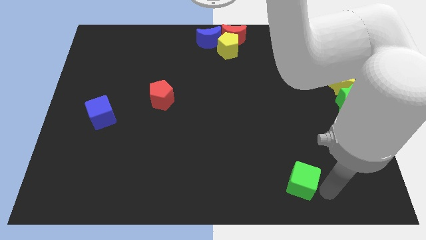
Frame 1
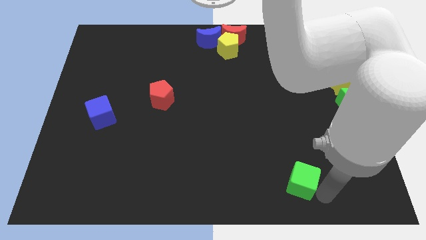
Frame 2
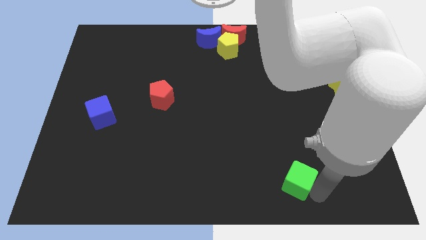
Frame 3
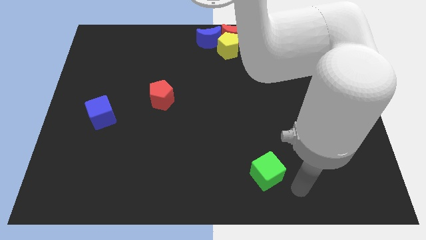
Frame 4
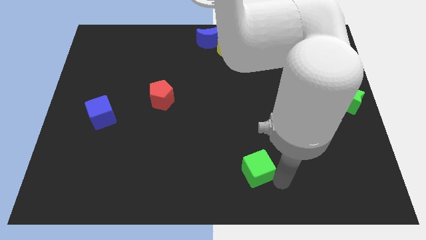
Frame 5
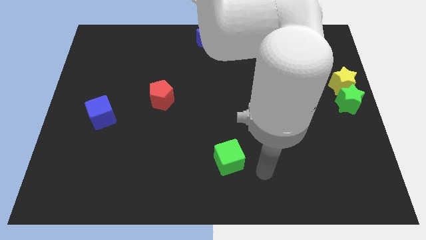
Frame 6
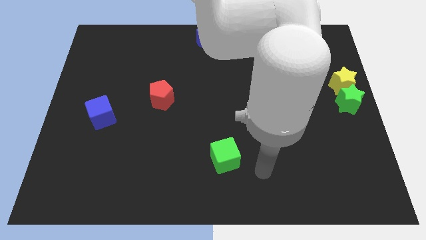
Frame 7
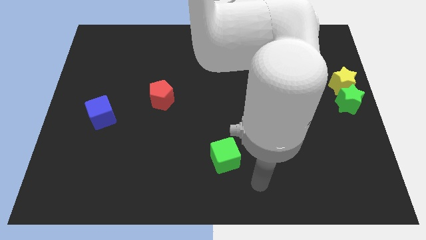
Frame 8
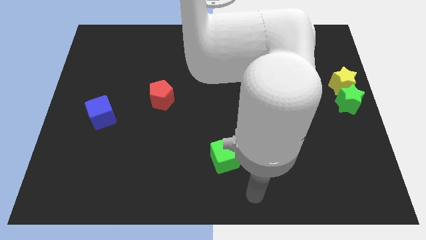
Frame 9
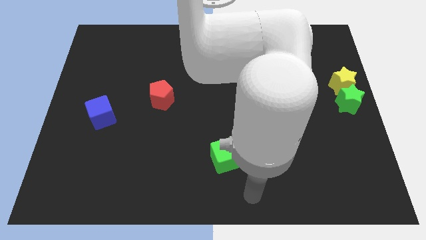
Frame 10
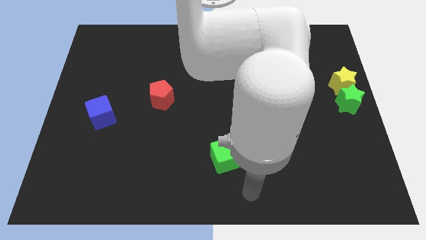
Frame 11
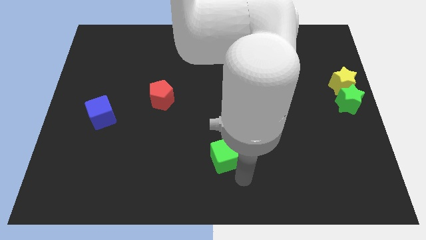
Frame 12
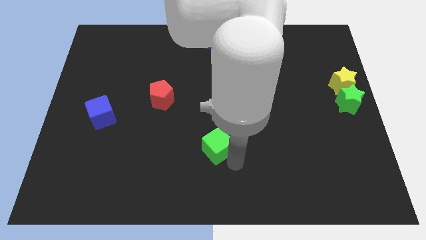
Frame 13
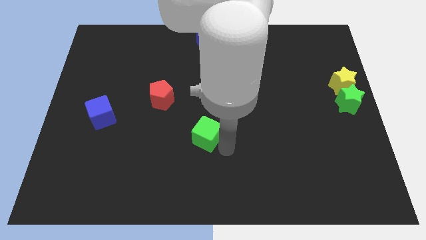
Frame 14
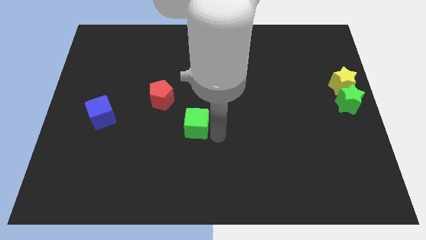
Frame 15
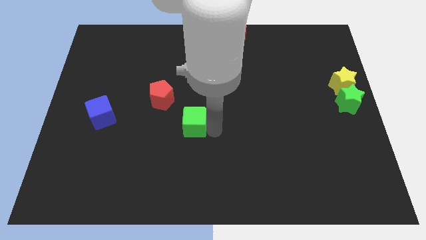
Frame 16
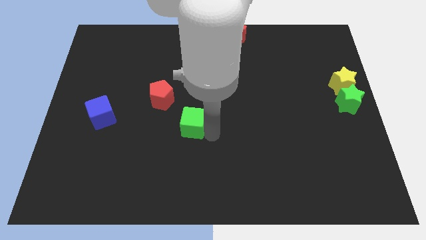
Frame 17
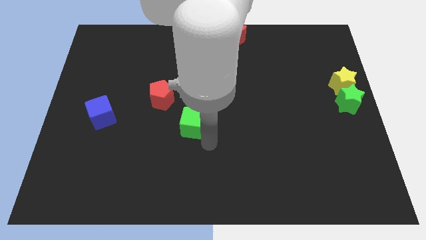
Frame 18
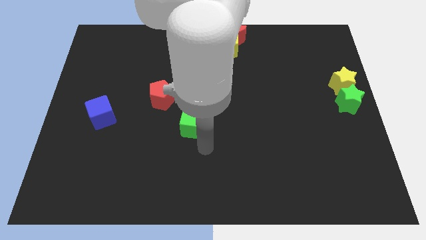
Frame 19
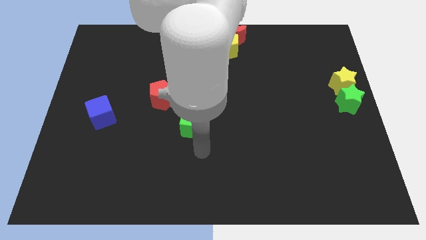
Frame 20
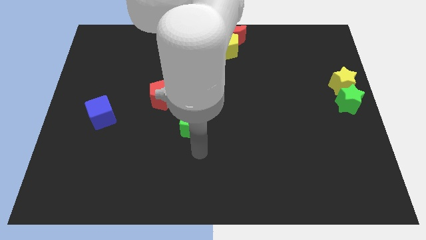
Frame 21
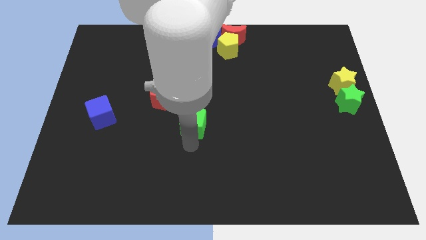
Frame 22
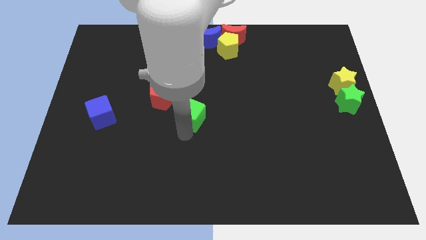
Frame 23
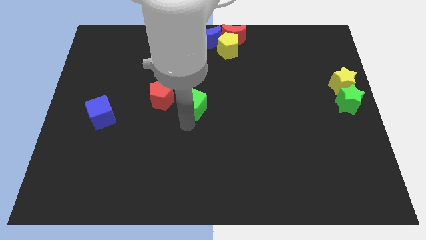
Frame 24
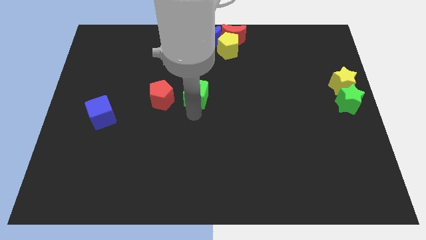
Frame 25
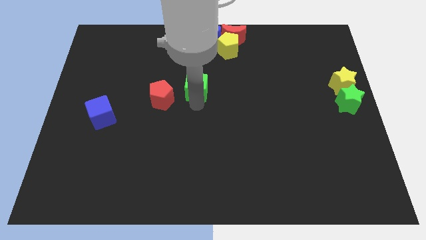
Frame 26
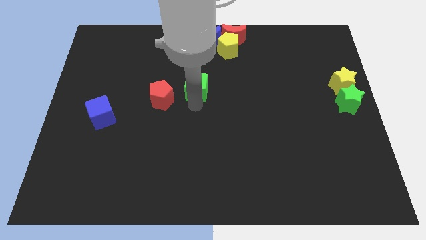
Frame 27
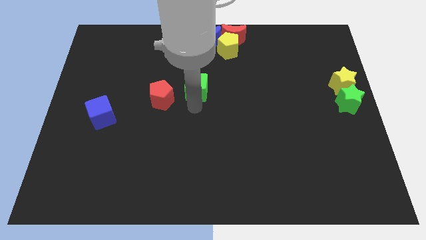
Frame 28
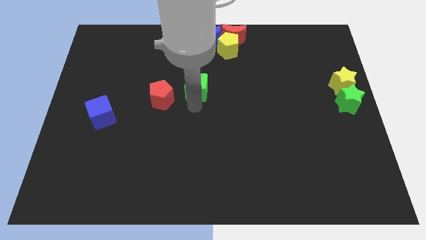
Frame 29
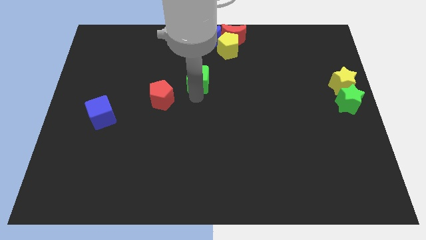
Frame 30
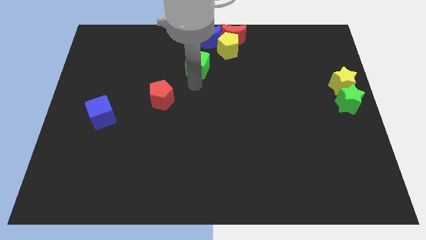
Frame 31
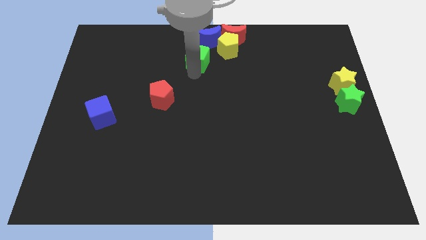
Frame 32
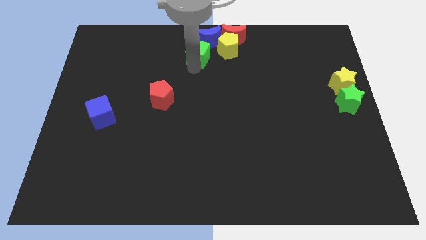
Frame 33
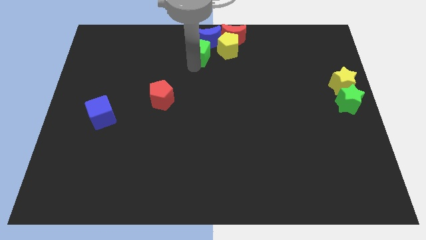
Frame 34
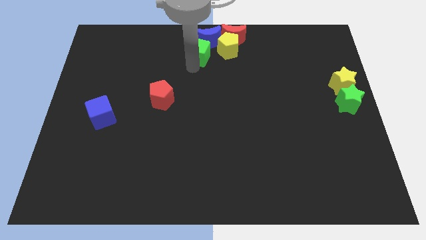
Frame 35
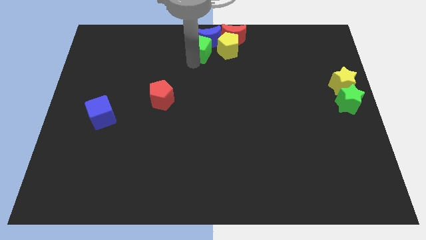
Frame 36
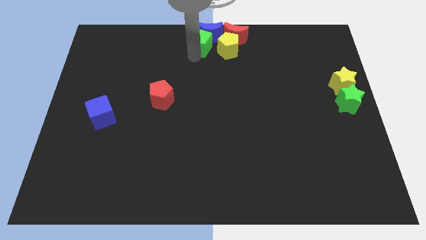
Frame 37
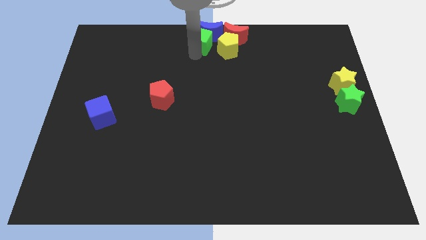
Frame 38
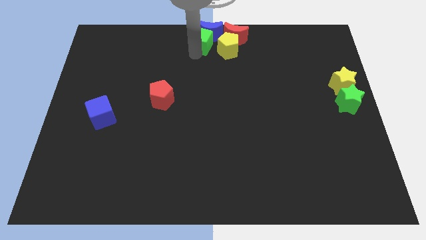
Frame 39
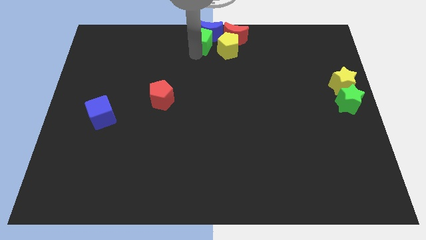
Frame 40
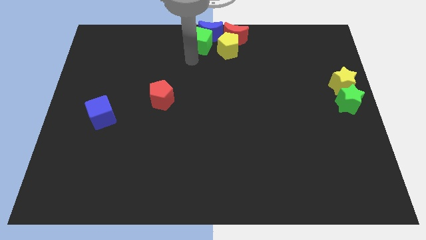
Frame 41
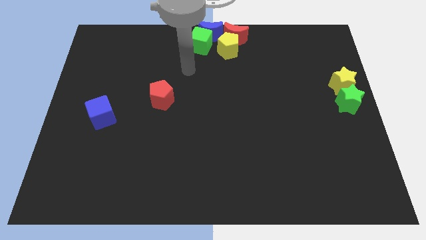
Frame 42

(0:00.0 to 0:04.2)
move the green cube to the left of the yellow pentagon

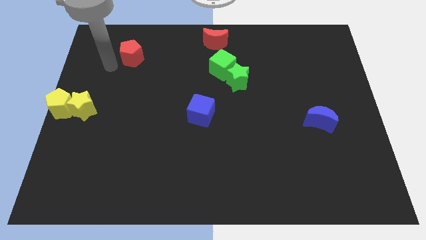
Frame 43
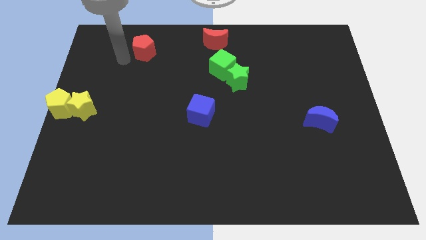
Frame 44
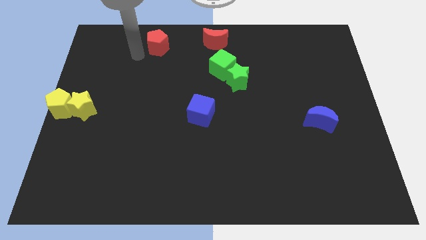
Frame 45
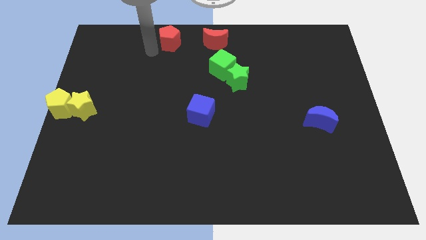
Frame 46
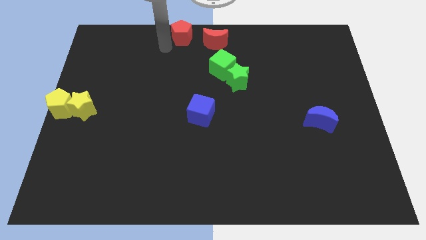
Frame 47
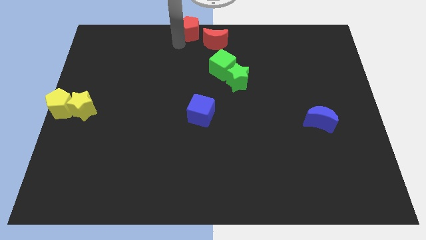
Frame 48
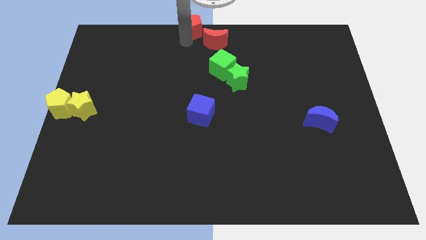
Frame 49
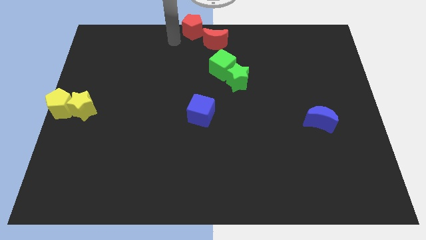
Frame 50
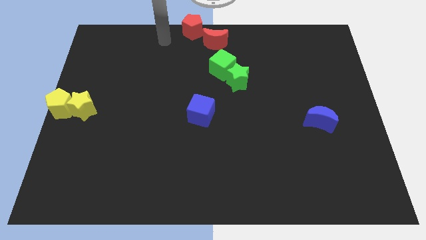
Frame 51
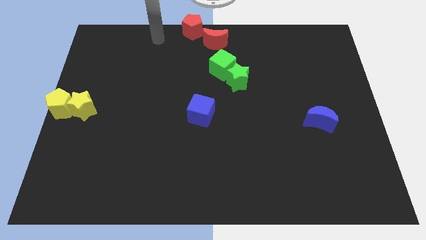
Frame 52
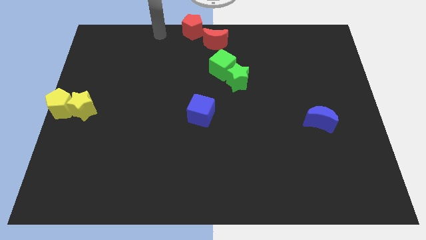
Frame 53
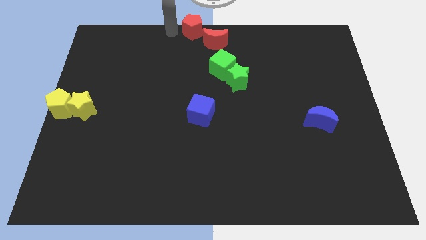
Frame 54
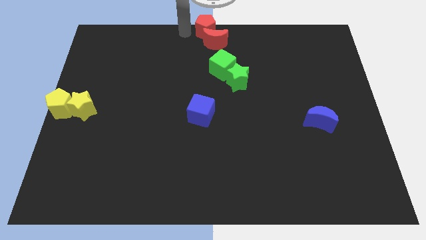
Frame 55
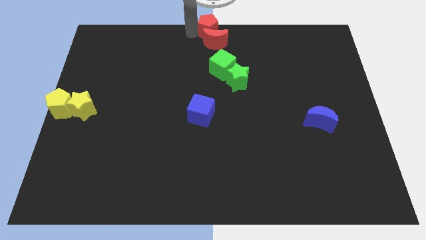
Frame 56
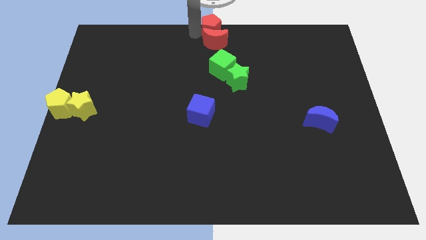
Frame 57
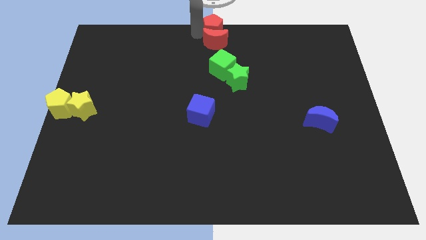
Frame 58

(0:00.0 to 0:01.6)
place the red pentagon on the top of the red crescenta

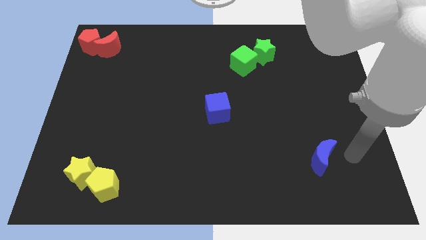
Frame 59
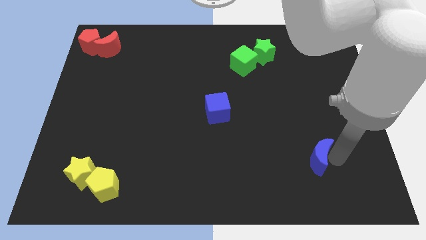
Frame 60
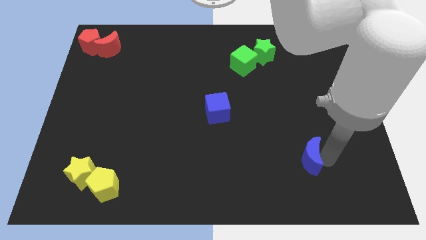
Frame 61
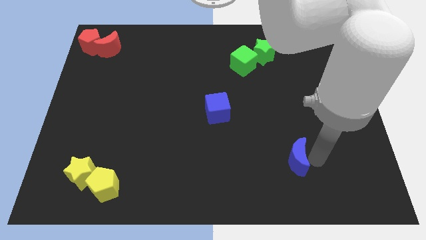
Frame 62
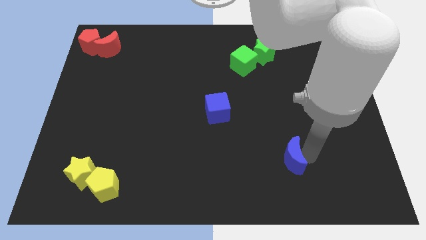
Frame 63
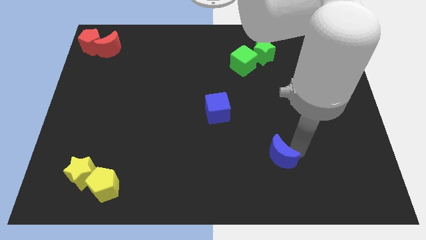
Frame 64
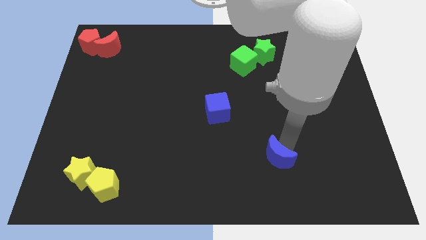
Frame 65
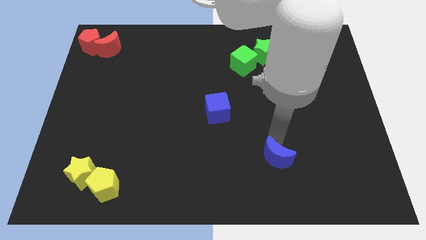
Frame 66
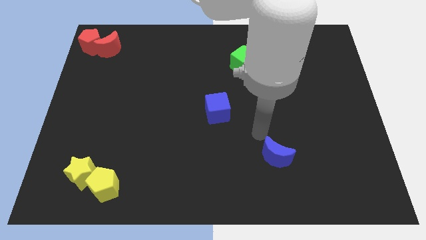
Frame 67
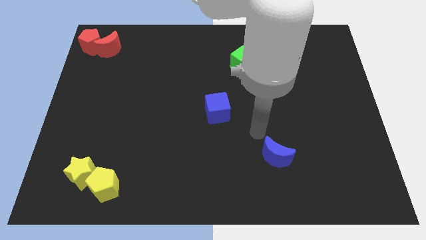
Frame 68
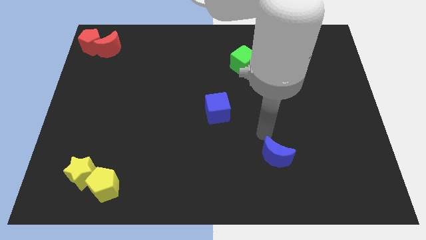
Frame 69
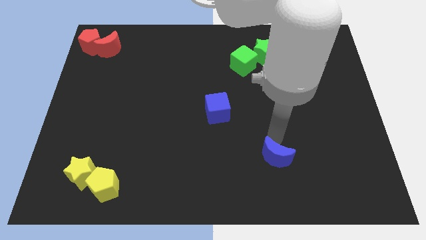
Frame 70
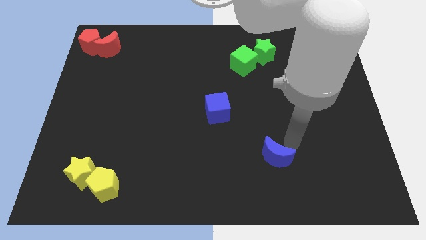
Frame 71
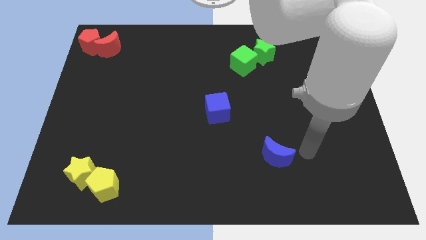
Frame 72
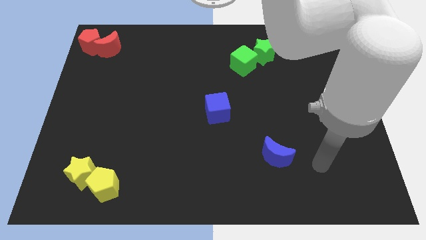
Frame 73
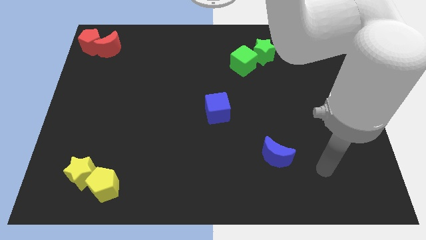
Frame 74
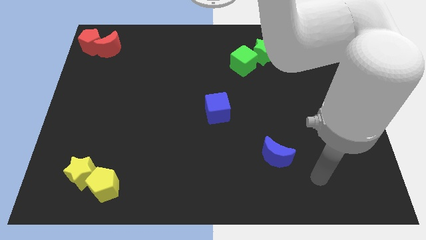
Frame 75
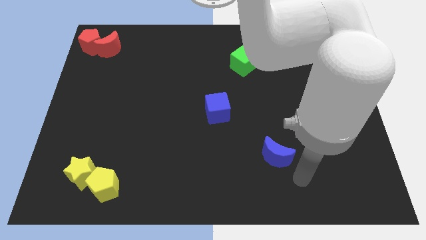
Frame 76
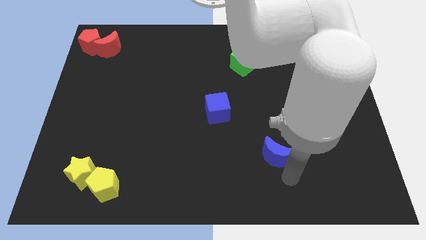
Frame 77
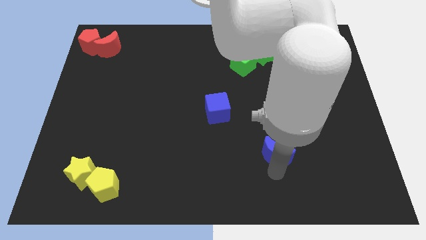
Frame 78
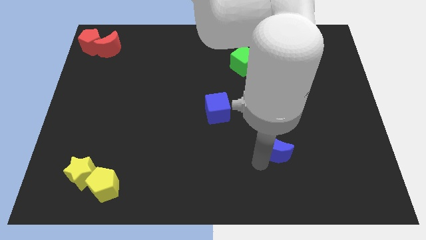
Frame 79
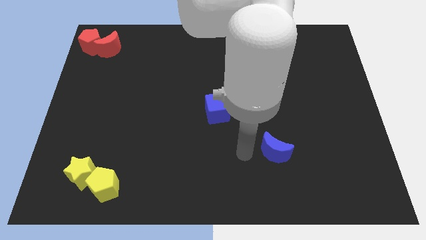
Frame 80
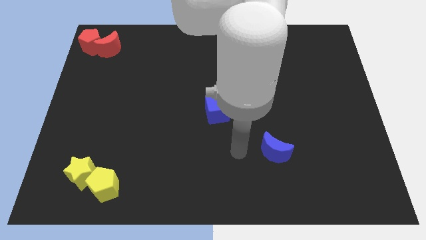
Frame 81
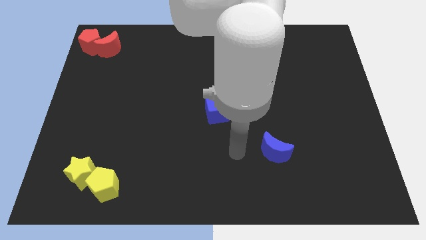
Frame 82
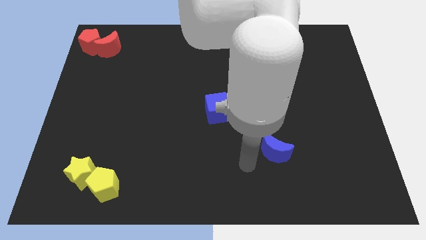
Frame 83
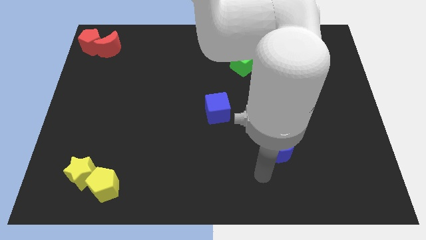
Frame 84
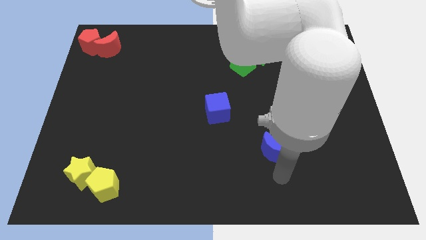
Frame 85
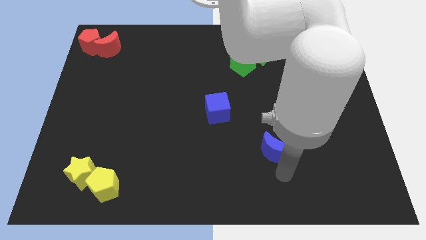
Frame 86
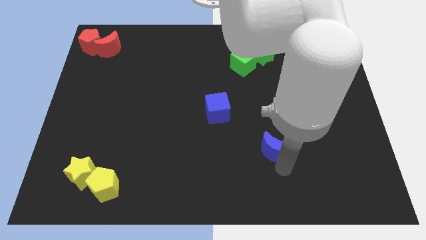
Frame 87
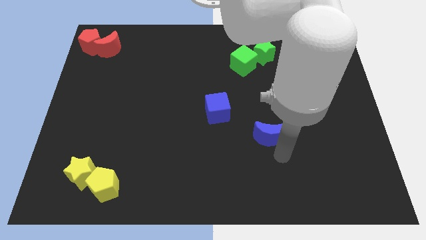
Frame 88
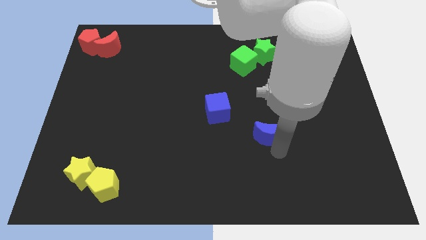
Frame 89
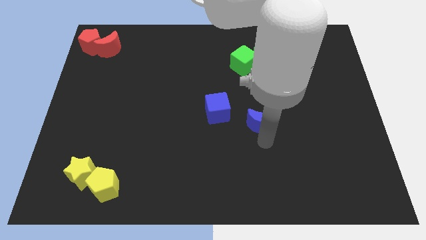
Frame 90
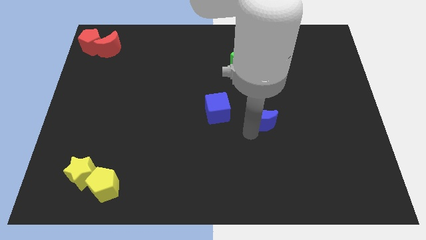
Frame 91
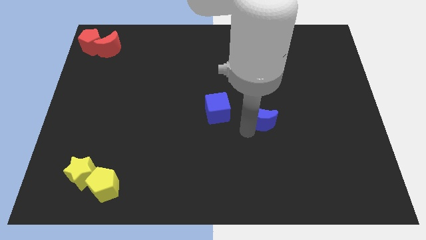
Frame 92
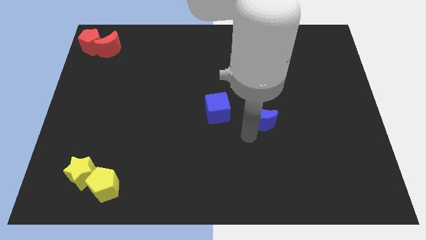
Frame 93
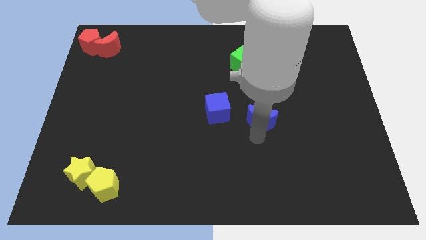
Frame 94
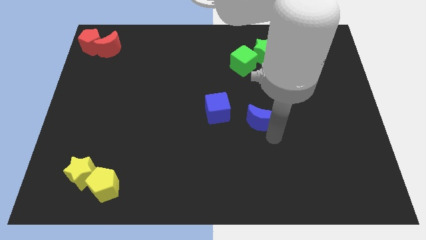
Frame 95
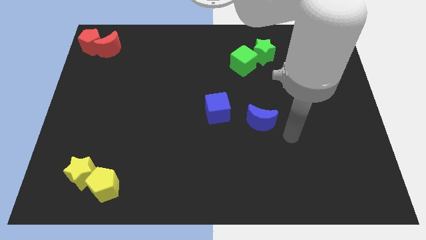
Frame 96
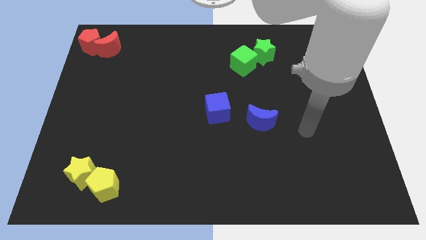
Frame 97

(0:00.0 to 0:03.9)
push blue crescent to the right of the blue cube
